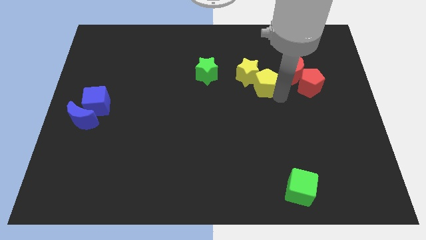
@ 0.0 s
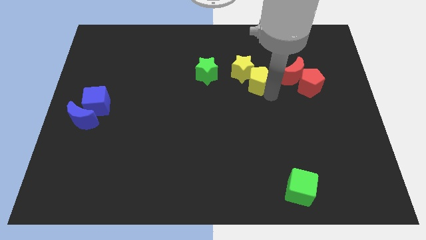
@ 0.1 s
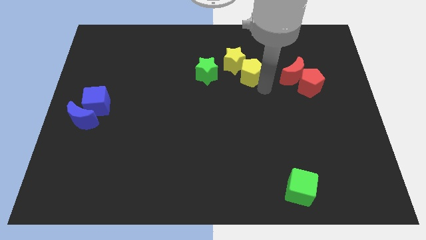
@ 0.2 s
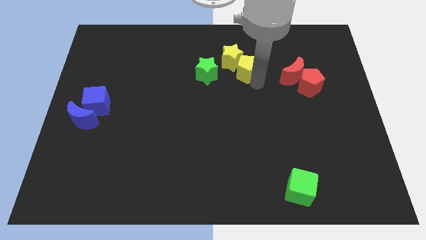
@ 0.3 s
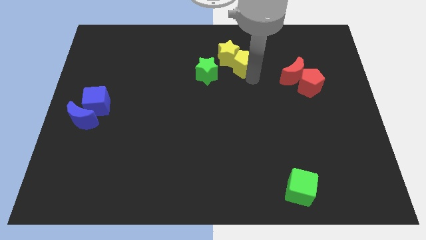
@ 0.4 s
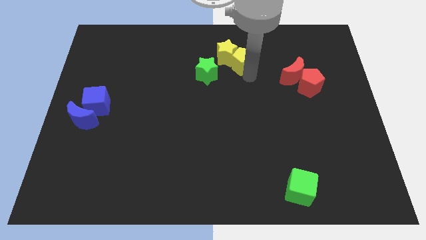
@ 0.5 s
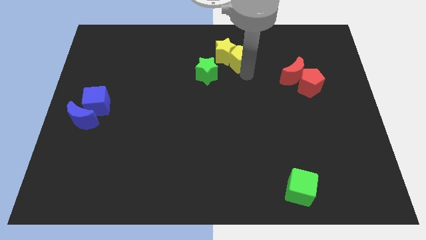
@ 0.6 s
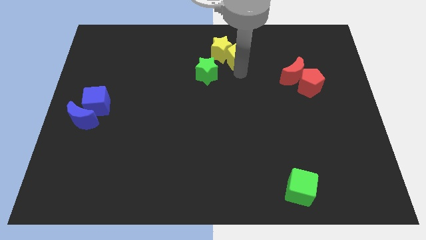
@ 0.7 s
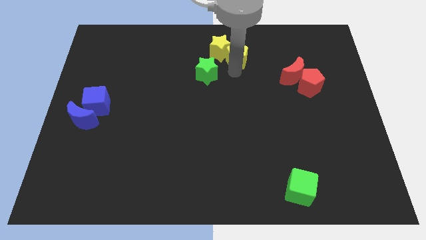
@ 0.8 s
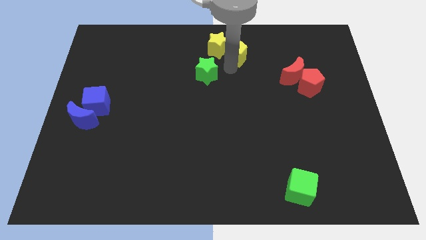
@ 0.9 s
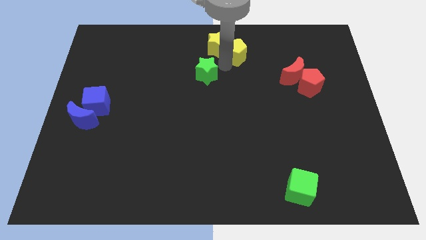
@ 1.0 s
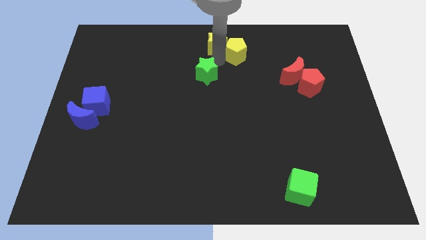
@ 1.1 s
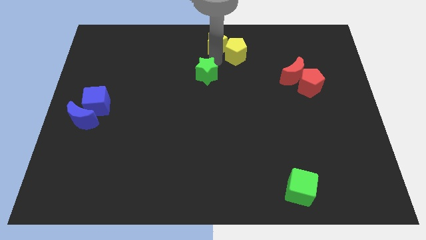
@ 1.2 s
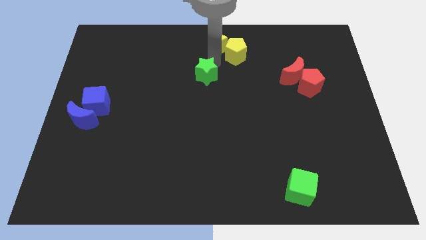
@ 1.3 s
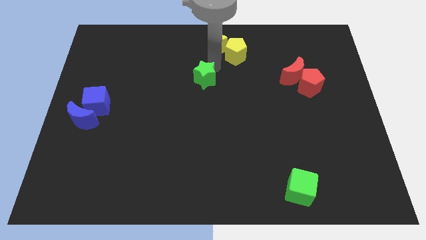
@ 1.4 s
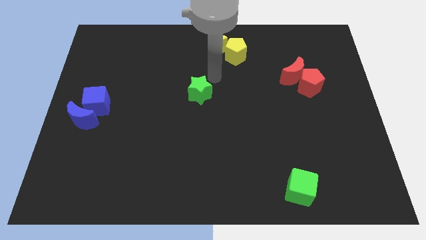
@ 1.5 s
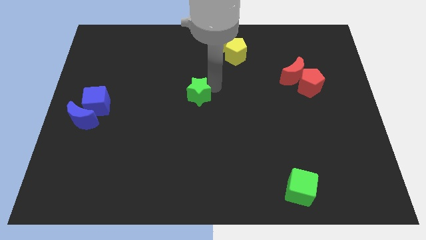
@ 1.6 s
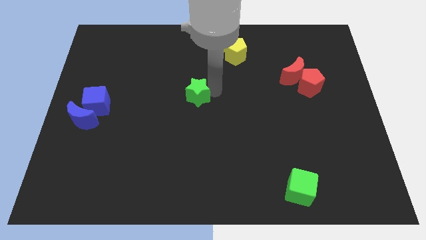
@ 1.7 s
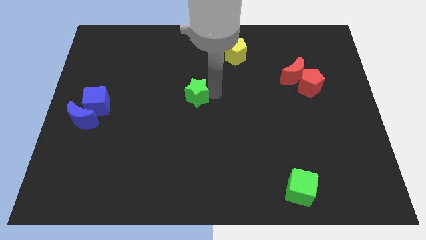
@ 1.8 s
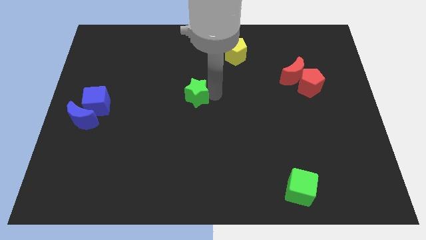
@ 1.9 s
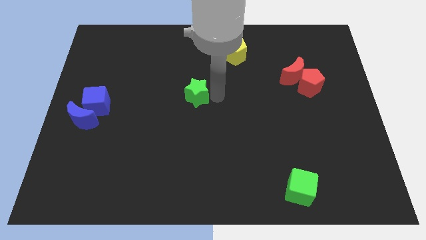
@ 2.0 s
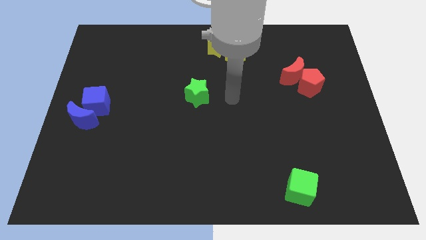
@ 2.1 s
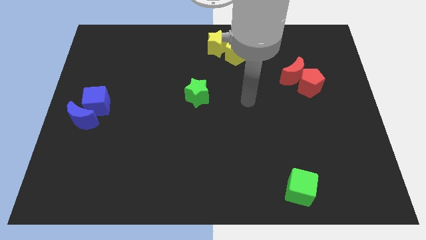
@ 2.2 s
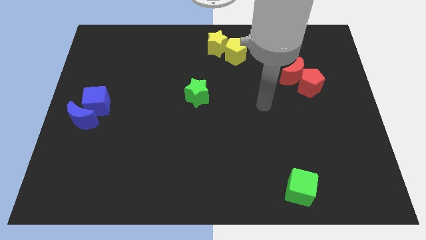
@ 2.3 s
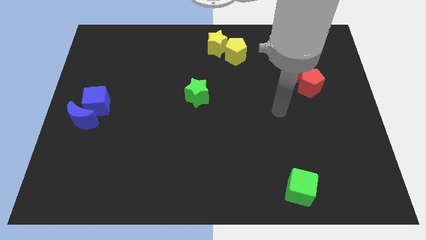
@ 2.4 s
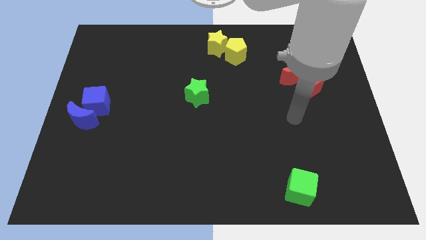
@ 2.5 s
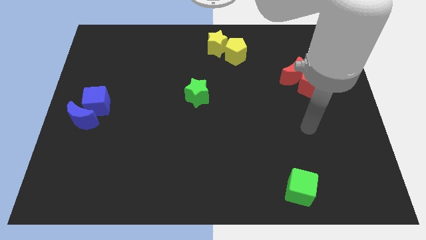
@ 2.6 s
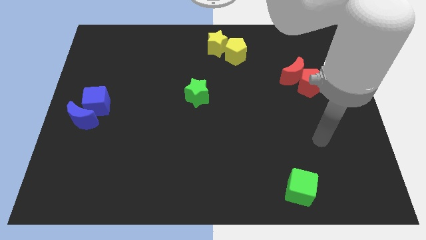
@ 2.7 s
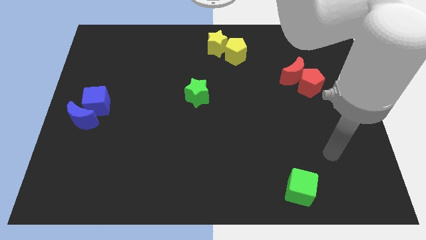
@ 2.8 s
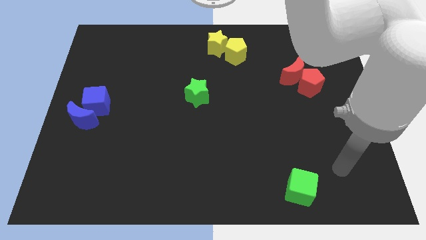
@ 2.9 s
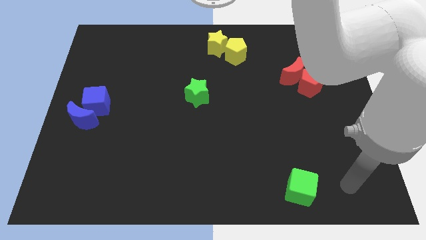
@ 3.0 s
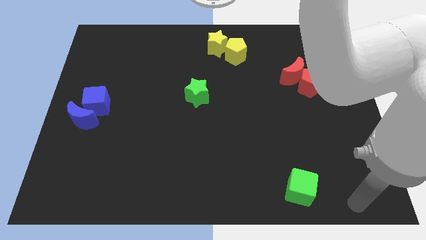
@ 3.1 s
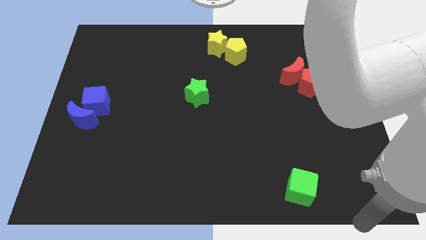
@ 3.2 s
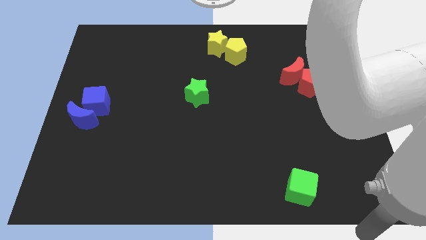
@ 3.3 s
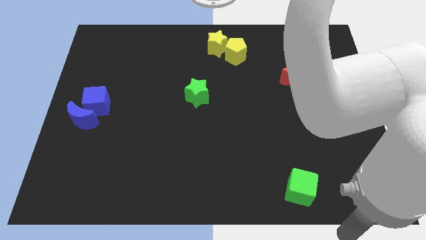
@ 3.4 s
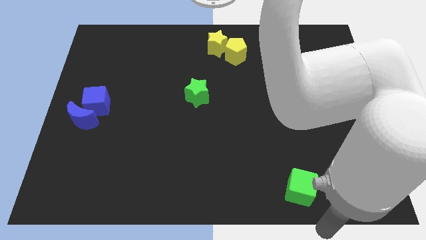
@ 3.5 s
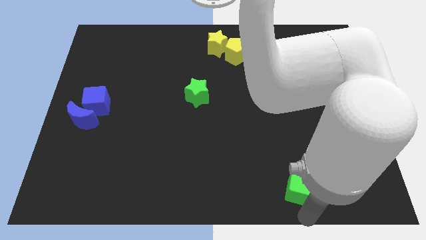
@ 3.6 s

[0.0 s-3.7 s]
move the yellow star with the yellow pentagon

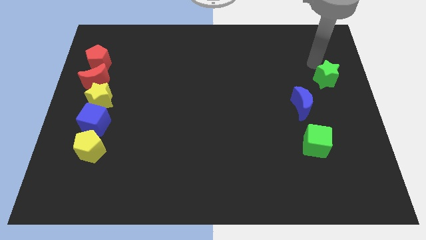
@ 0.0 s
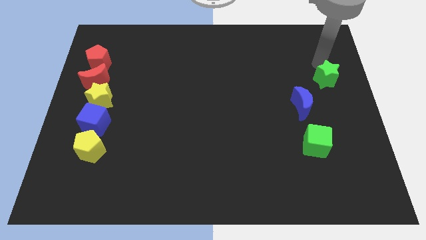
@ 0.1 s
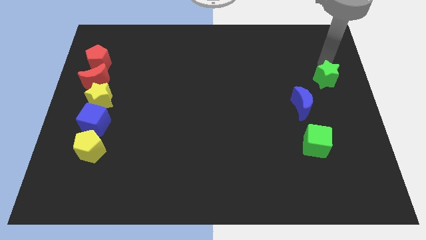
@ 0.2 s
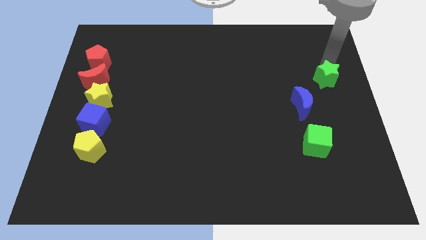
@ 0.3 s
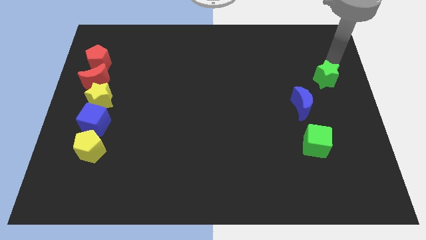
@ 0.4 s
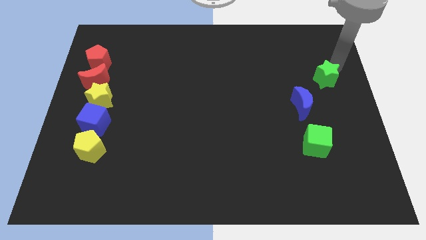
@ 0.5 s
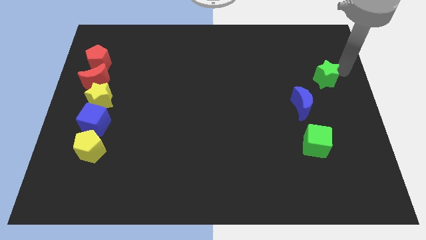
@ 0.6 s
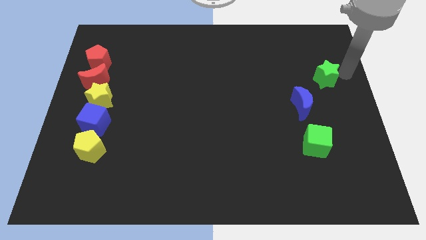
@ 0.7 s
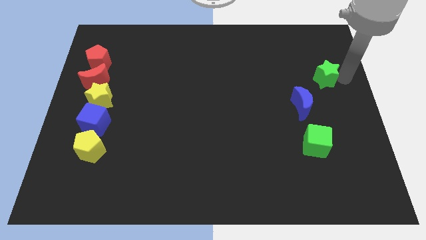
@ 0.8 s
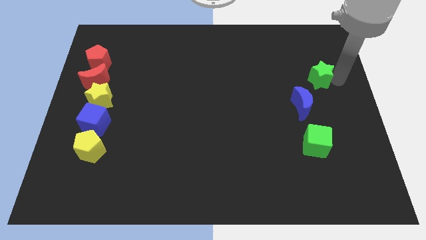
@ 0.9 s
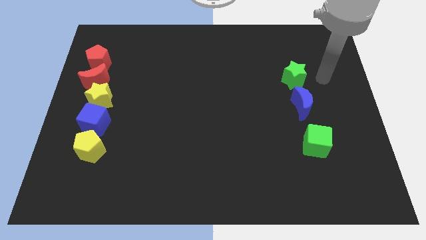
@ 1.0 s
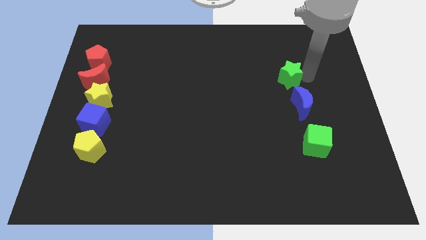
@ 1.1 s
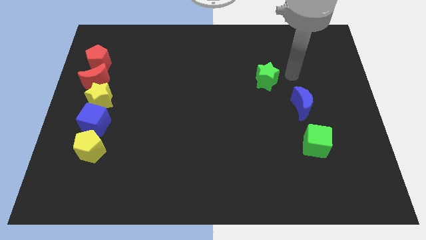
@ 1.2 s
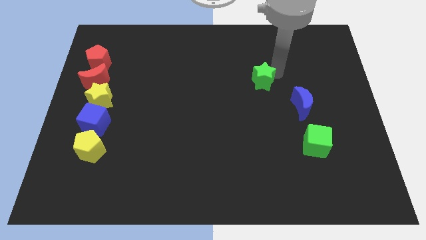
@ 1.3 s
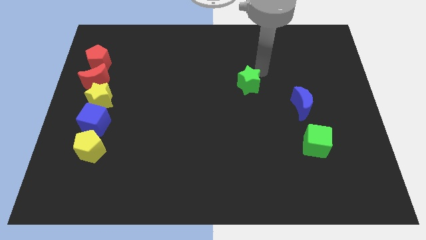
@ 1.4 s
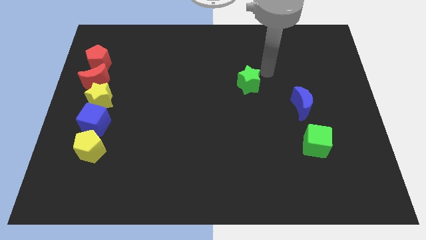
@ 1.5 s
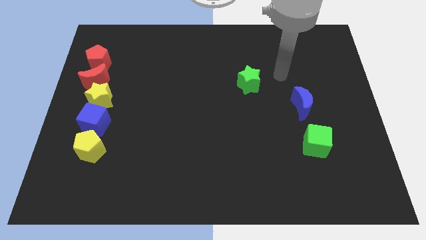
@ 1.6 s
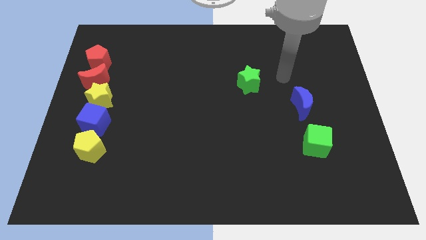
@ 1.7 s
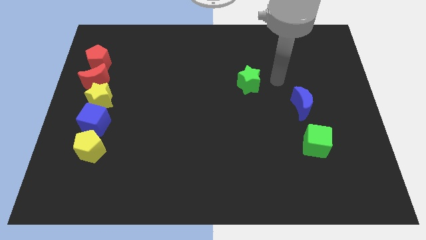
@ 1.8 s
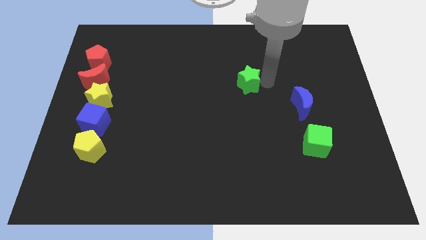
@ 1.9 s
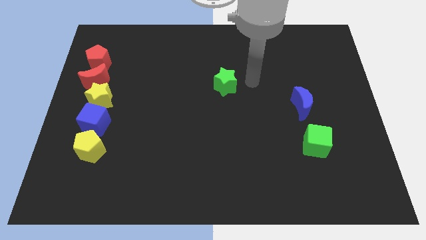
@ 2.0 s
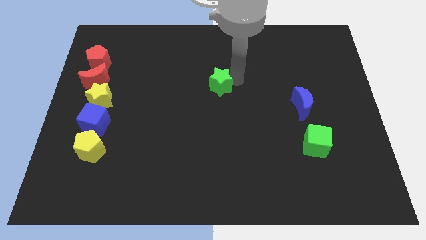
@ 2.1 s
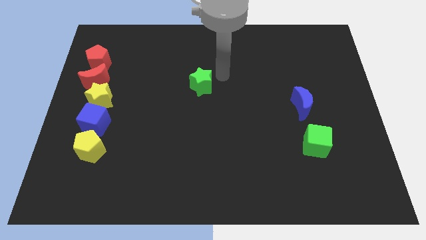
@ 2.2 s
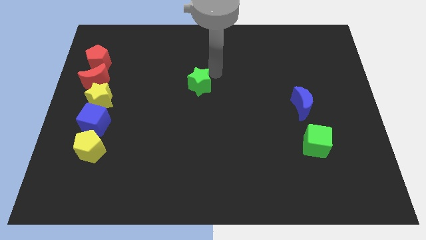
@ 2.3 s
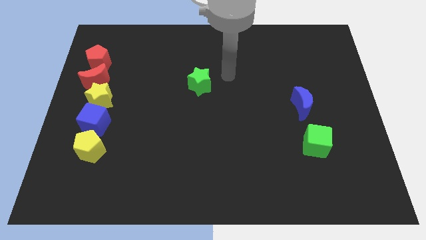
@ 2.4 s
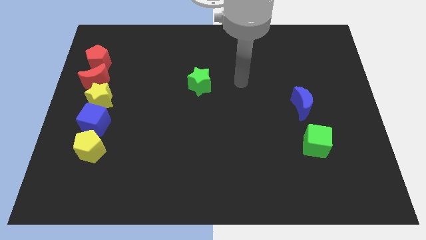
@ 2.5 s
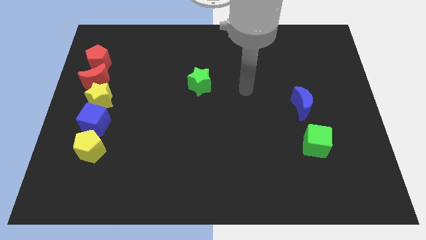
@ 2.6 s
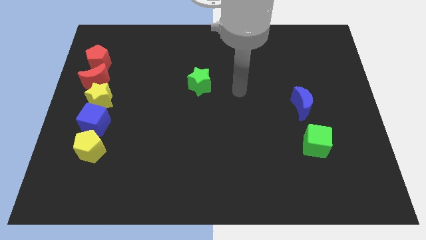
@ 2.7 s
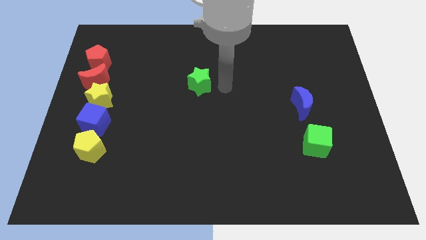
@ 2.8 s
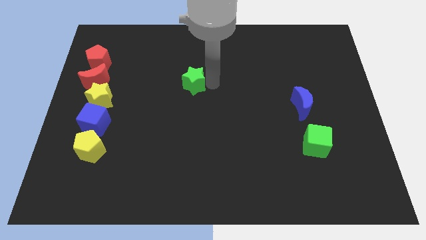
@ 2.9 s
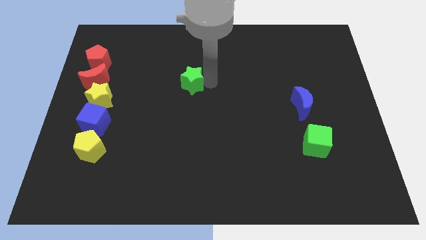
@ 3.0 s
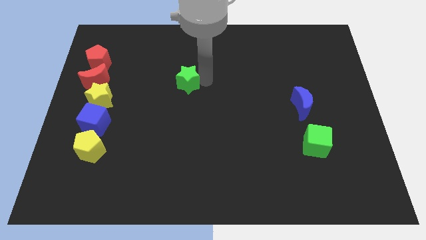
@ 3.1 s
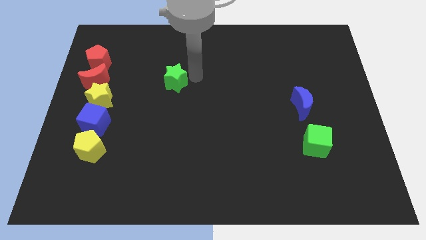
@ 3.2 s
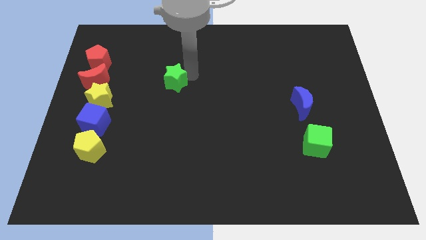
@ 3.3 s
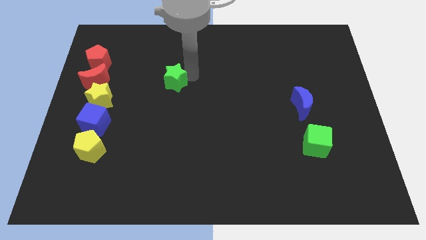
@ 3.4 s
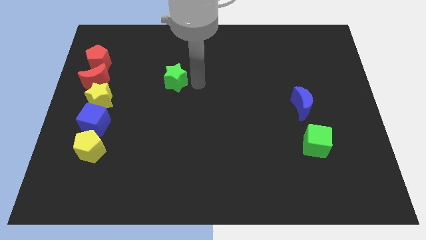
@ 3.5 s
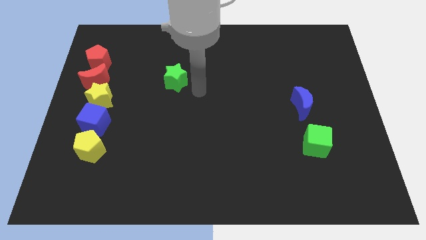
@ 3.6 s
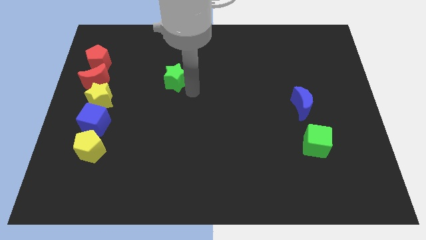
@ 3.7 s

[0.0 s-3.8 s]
move the green star to the right of the red moon

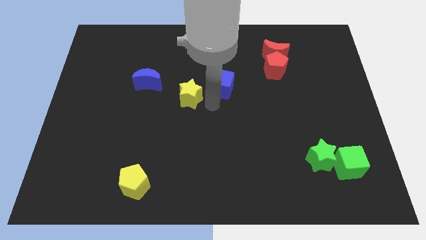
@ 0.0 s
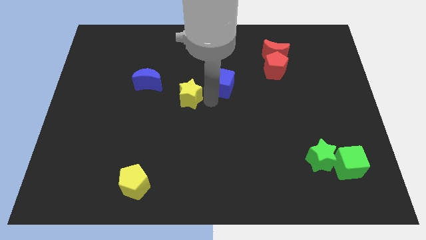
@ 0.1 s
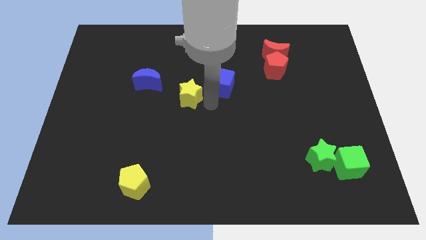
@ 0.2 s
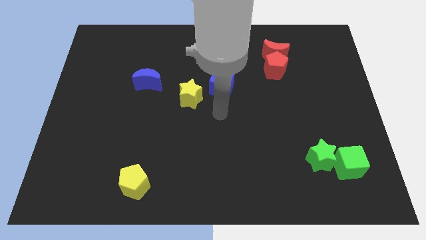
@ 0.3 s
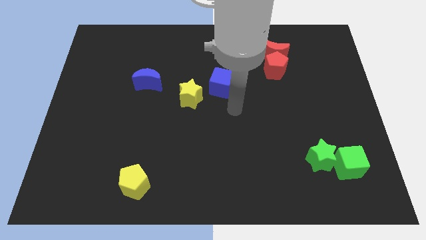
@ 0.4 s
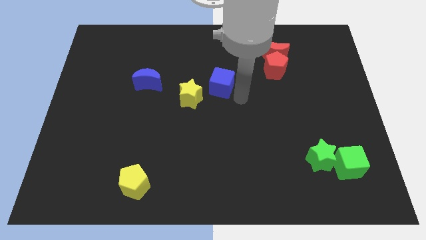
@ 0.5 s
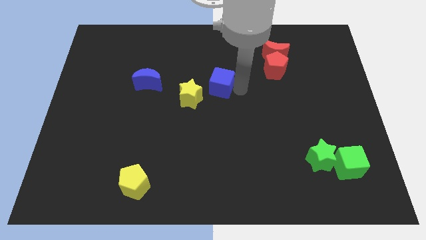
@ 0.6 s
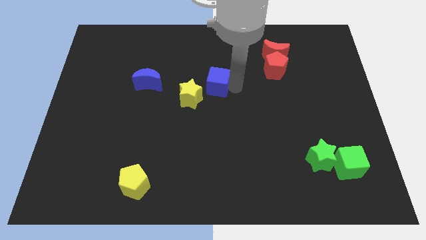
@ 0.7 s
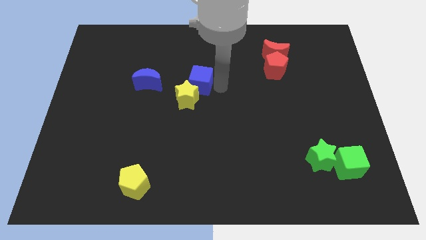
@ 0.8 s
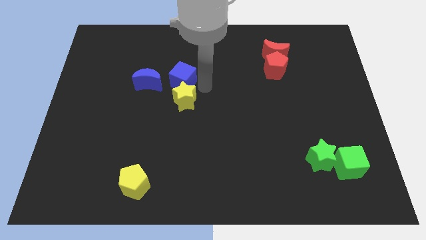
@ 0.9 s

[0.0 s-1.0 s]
place the blue cube above the yellow star

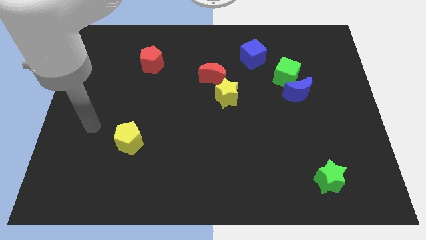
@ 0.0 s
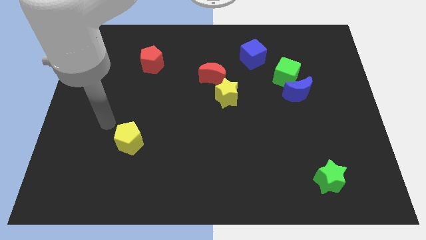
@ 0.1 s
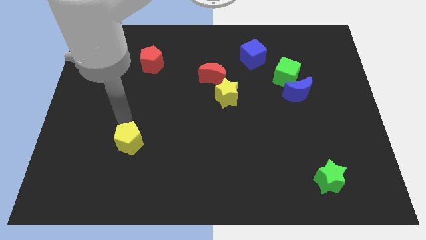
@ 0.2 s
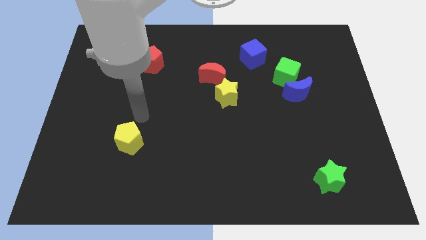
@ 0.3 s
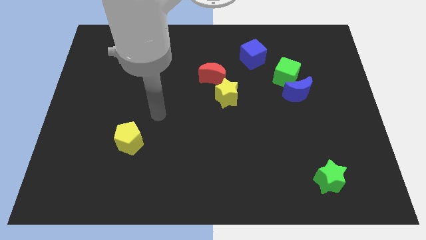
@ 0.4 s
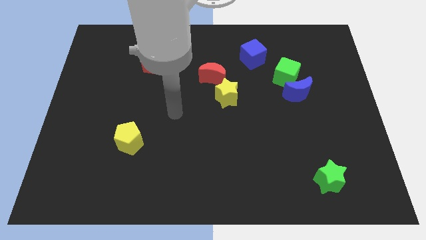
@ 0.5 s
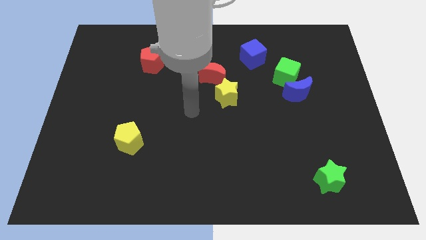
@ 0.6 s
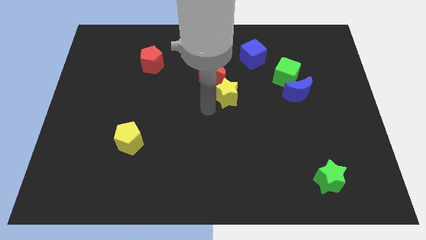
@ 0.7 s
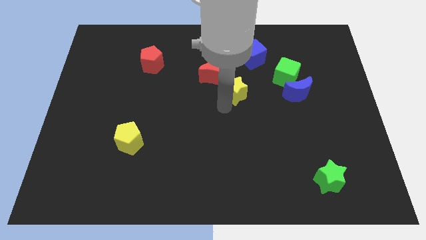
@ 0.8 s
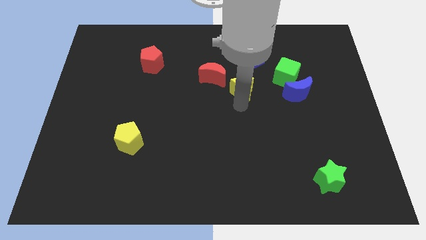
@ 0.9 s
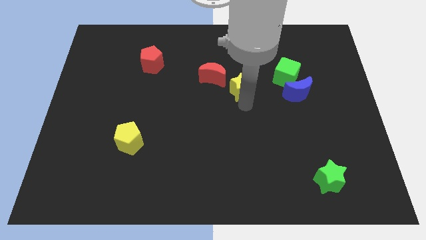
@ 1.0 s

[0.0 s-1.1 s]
push the yellow star to the bottom right of the red crescent
